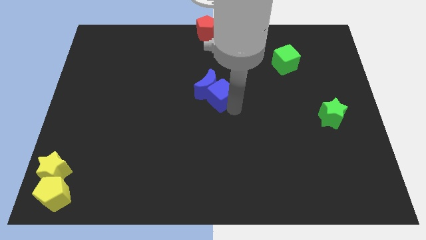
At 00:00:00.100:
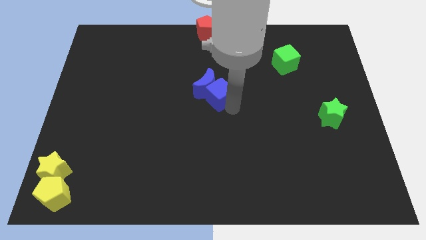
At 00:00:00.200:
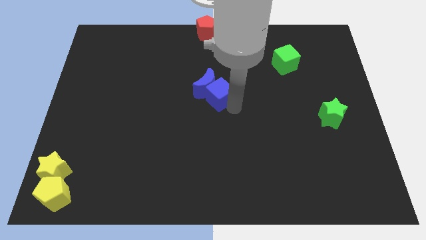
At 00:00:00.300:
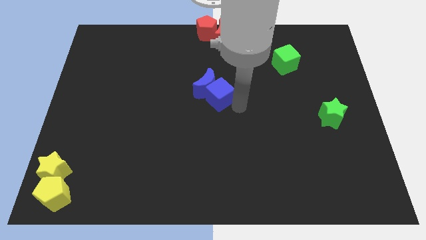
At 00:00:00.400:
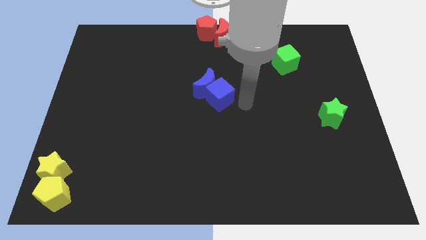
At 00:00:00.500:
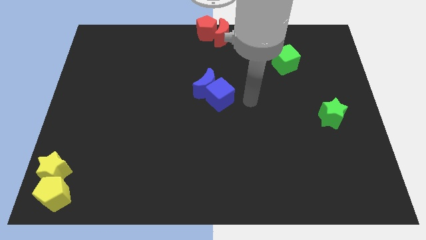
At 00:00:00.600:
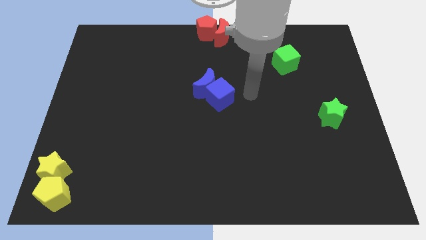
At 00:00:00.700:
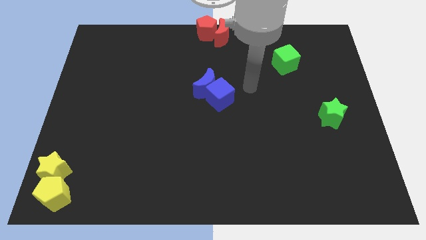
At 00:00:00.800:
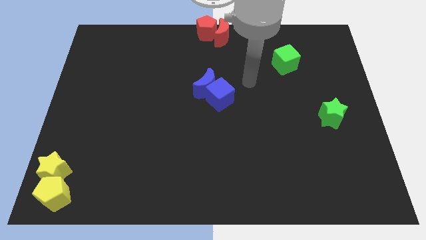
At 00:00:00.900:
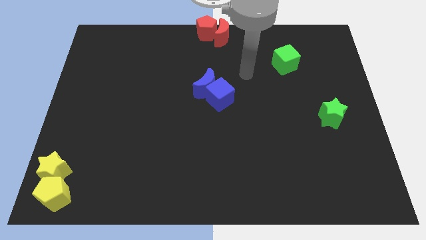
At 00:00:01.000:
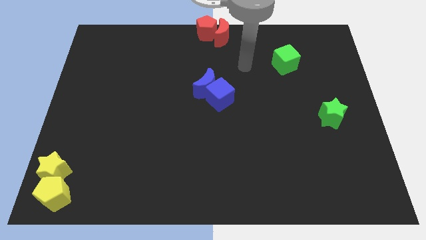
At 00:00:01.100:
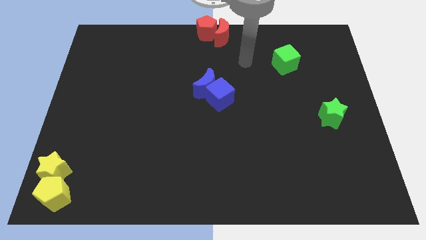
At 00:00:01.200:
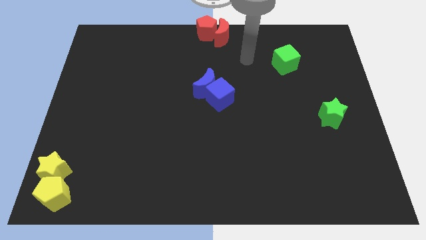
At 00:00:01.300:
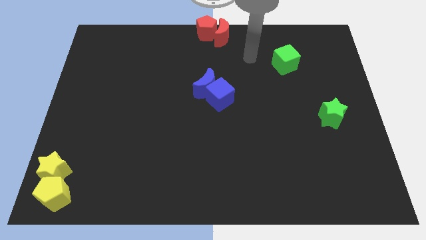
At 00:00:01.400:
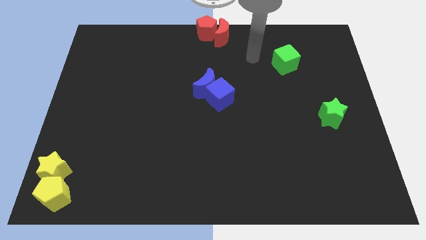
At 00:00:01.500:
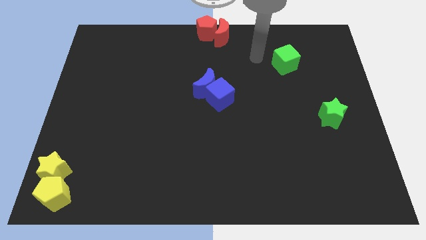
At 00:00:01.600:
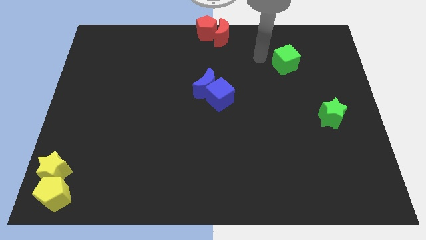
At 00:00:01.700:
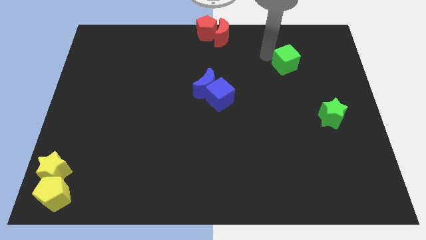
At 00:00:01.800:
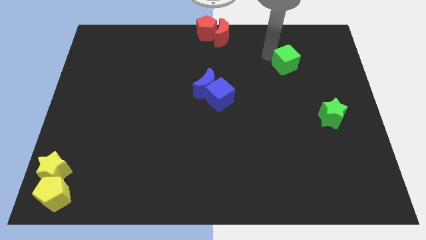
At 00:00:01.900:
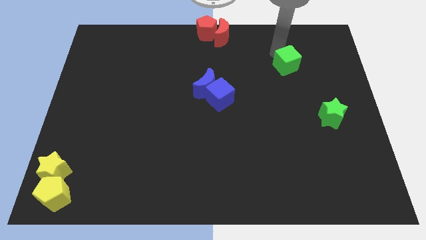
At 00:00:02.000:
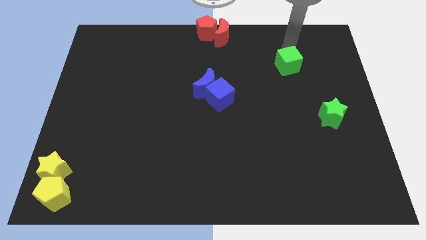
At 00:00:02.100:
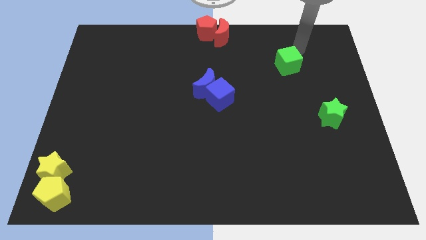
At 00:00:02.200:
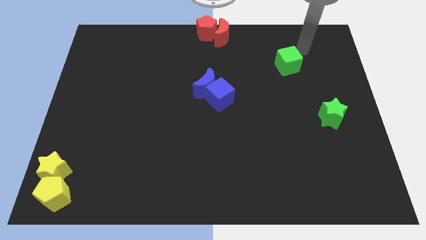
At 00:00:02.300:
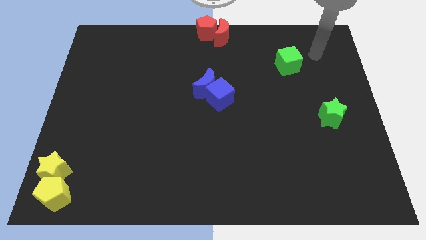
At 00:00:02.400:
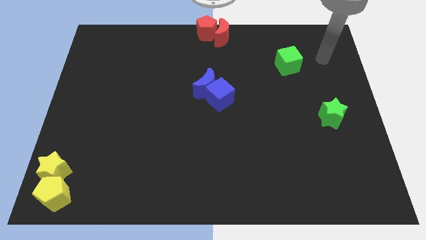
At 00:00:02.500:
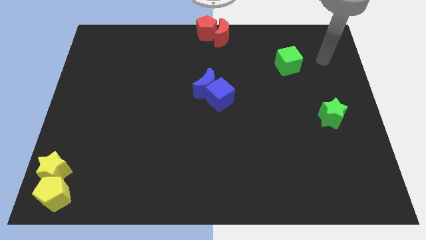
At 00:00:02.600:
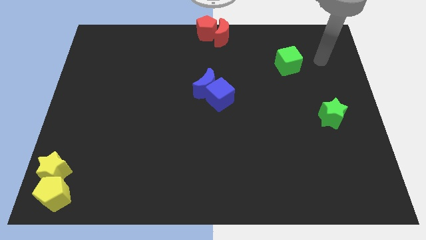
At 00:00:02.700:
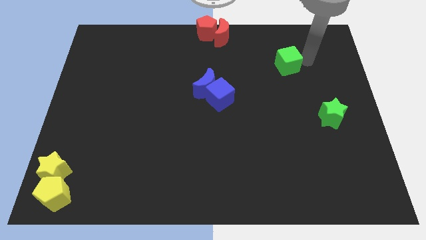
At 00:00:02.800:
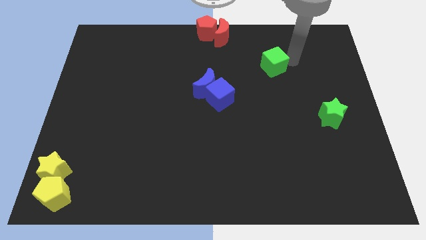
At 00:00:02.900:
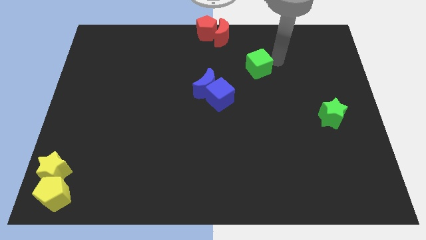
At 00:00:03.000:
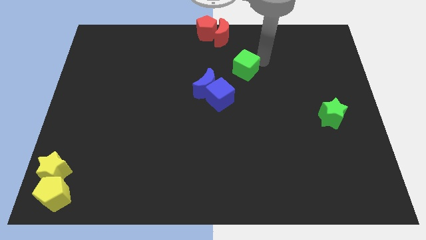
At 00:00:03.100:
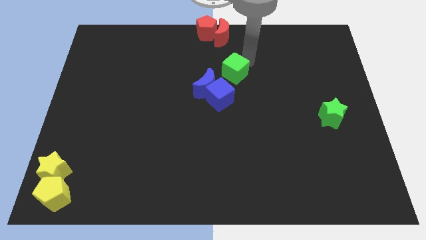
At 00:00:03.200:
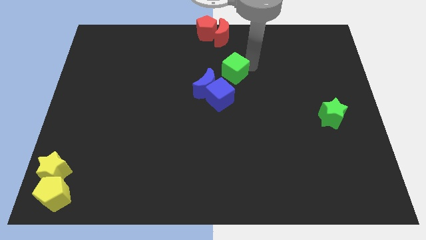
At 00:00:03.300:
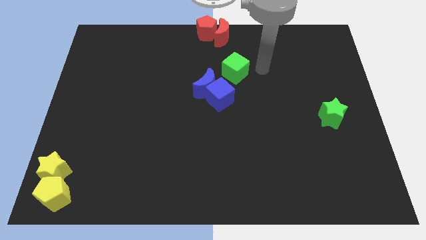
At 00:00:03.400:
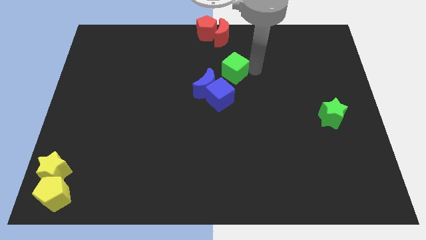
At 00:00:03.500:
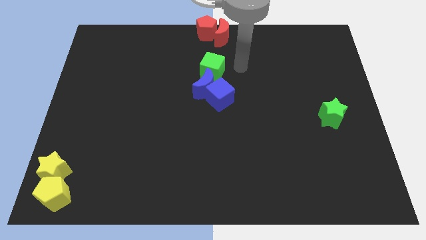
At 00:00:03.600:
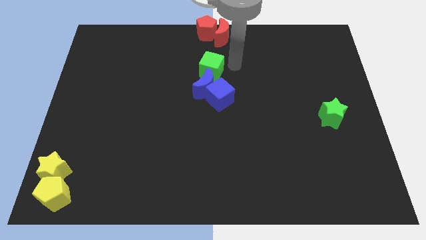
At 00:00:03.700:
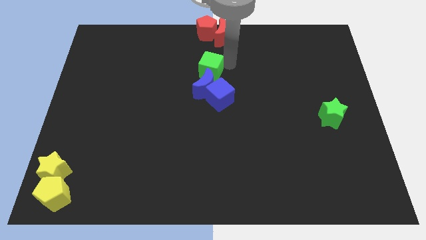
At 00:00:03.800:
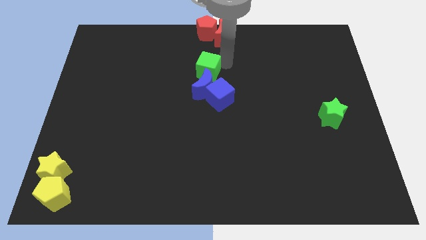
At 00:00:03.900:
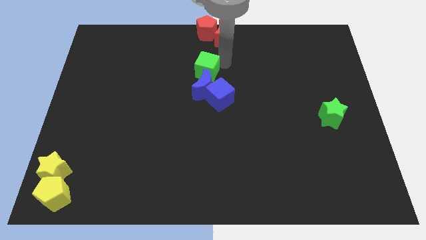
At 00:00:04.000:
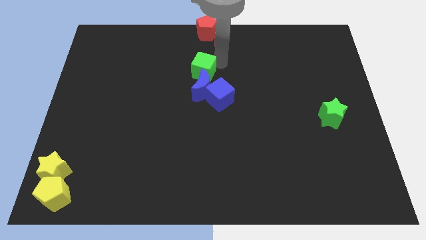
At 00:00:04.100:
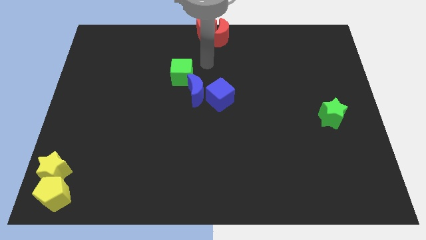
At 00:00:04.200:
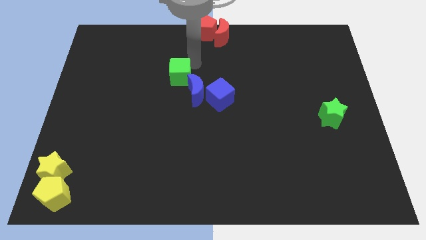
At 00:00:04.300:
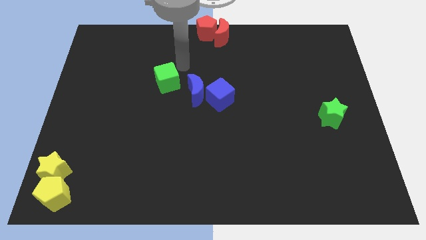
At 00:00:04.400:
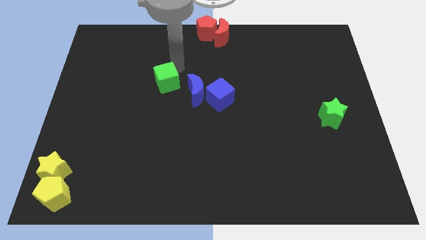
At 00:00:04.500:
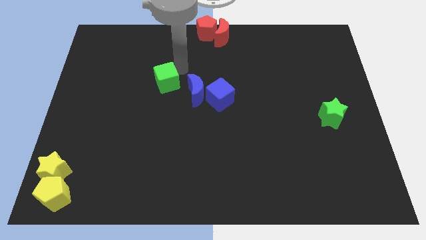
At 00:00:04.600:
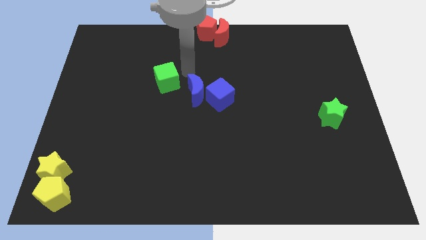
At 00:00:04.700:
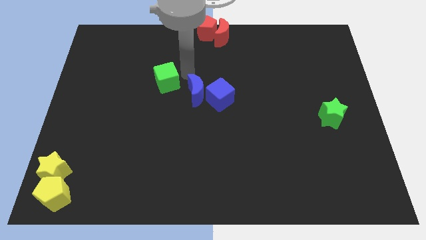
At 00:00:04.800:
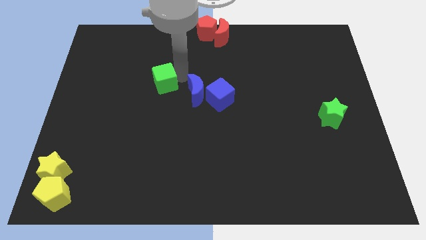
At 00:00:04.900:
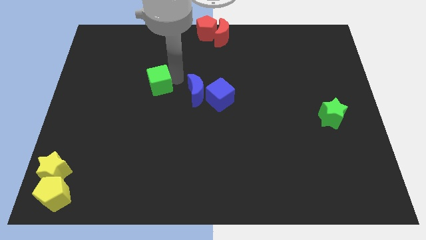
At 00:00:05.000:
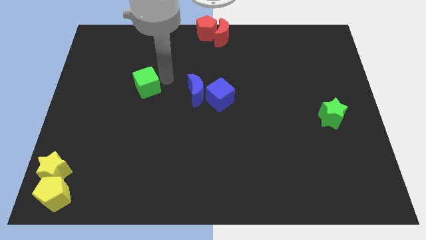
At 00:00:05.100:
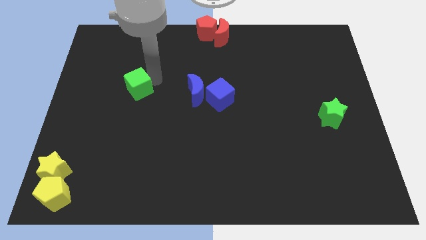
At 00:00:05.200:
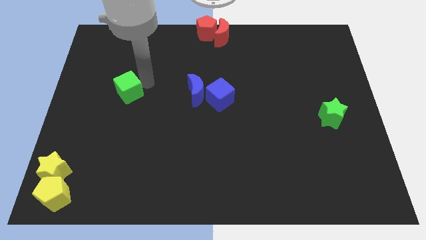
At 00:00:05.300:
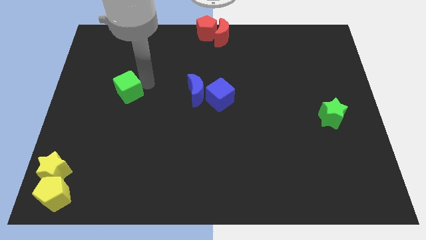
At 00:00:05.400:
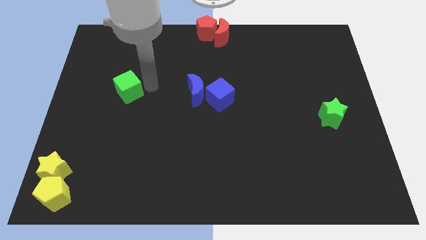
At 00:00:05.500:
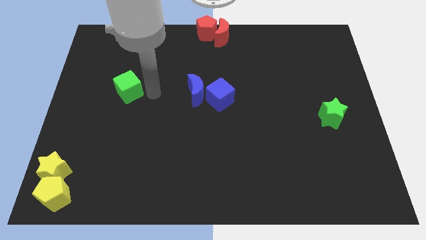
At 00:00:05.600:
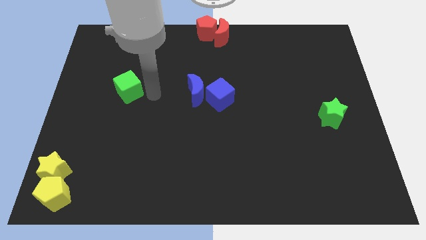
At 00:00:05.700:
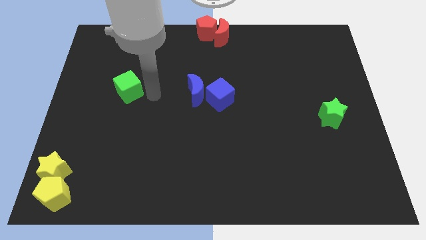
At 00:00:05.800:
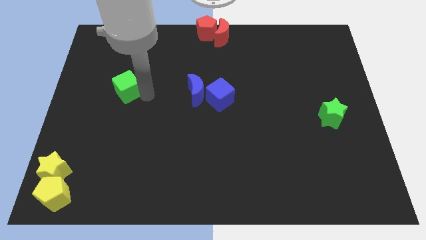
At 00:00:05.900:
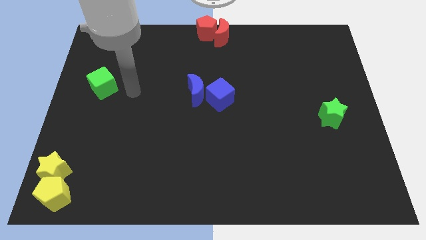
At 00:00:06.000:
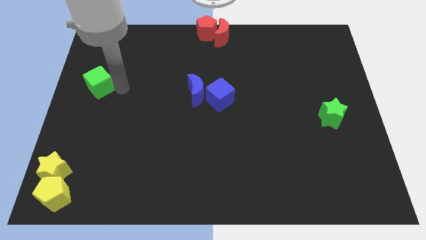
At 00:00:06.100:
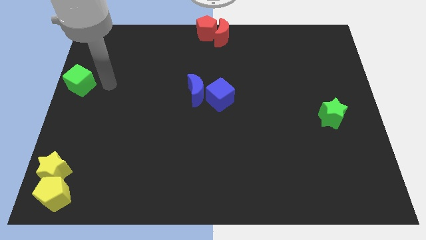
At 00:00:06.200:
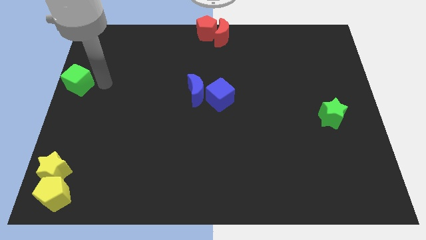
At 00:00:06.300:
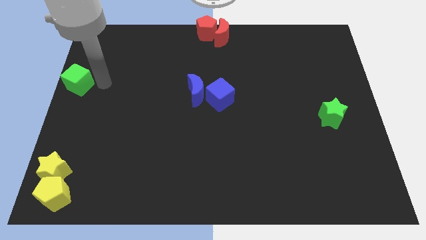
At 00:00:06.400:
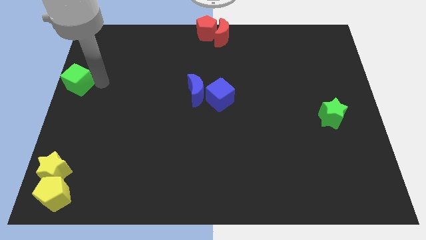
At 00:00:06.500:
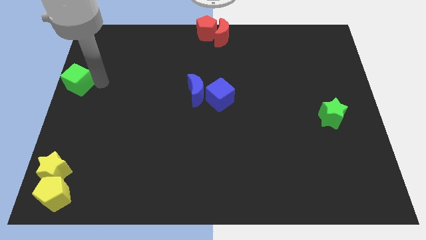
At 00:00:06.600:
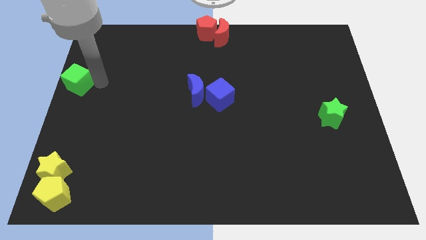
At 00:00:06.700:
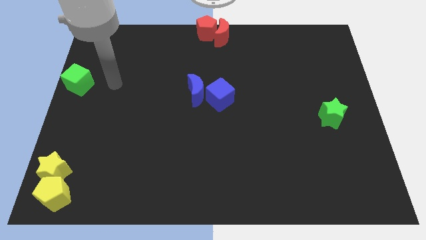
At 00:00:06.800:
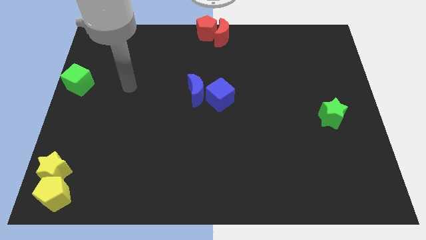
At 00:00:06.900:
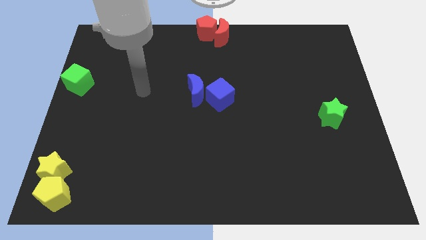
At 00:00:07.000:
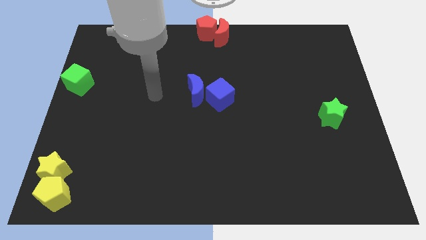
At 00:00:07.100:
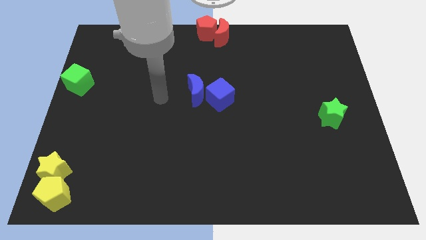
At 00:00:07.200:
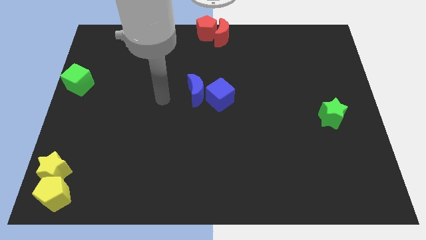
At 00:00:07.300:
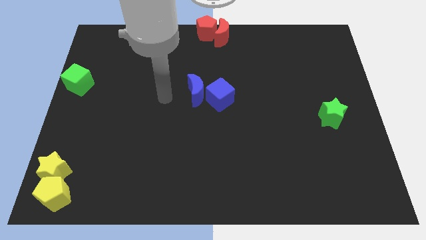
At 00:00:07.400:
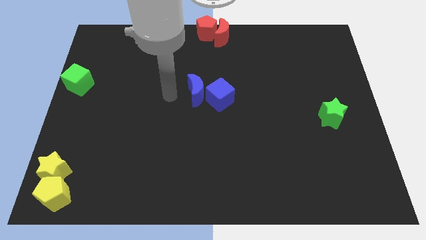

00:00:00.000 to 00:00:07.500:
push the green cube to the top left

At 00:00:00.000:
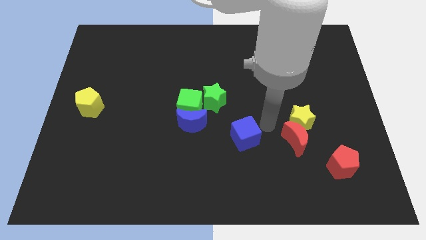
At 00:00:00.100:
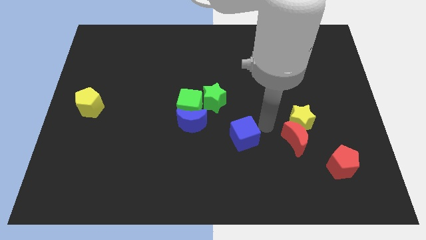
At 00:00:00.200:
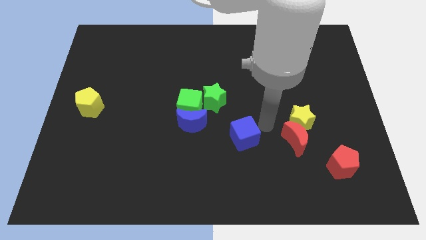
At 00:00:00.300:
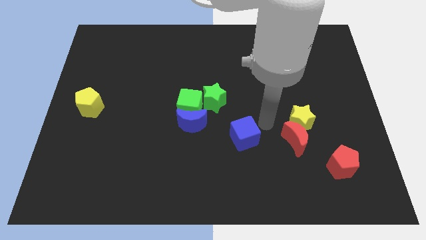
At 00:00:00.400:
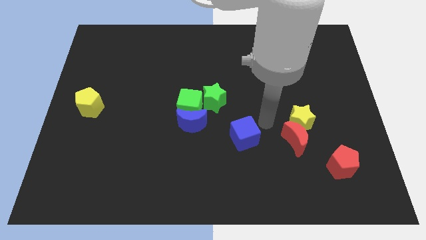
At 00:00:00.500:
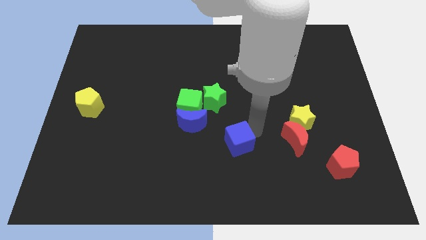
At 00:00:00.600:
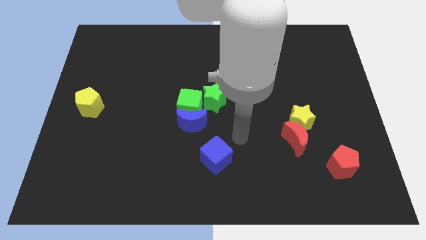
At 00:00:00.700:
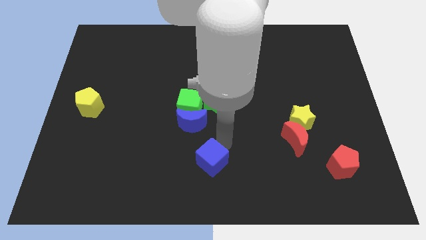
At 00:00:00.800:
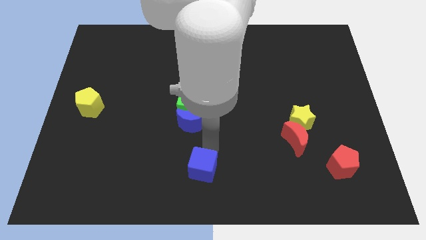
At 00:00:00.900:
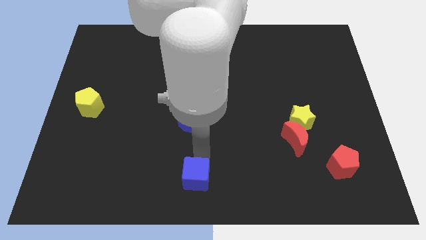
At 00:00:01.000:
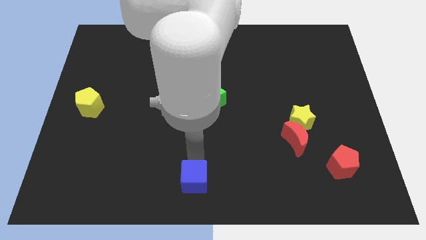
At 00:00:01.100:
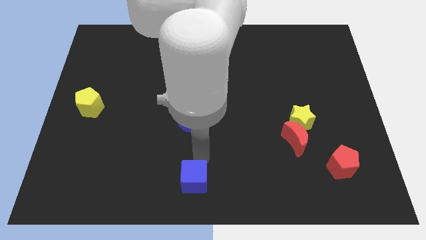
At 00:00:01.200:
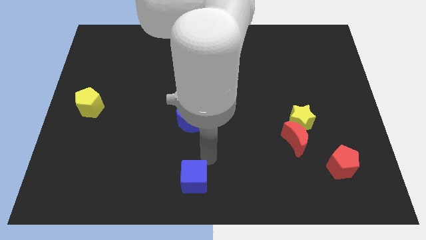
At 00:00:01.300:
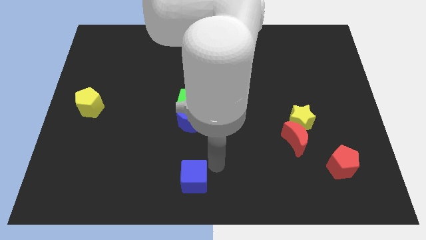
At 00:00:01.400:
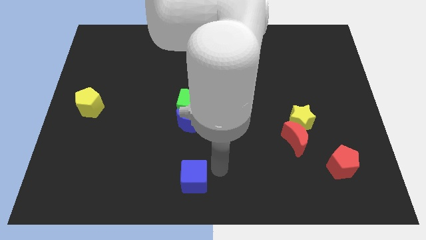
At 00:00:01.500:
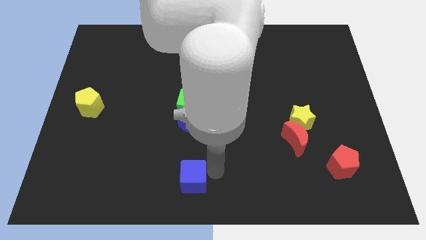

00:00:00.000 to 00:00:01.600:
push blue cube below blue crescent
